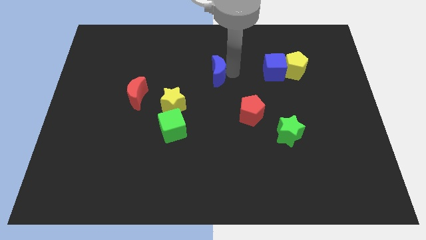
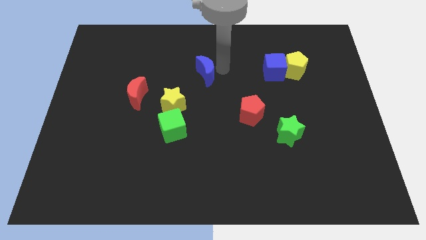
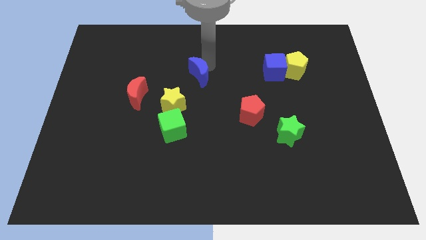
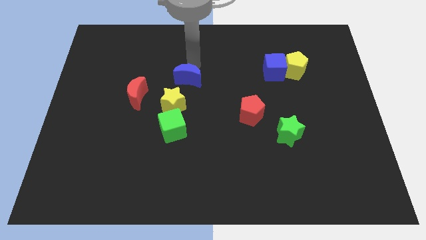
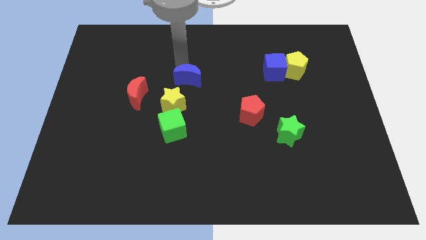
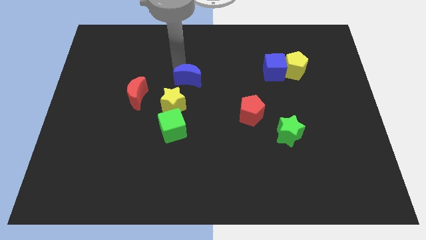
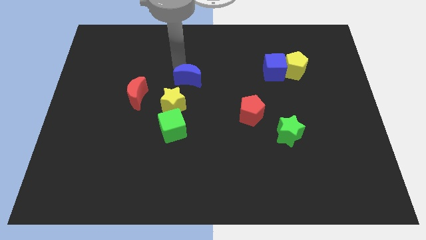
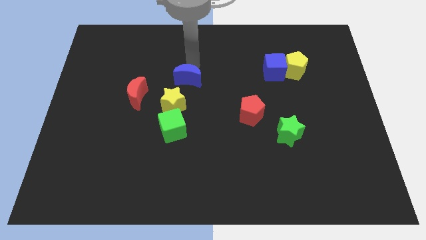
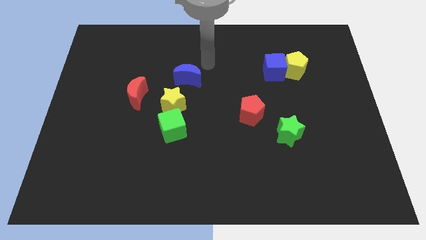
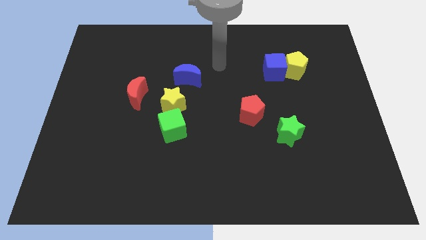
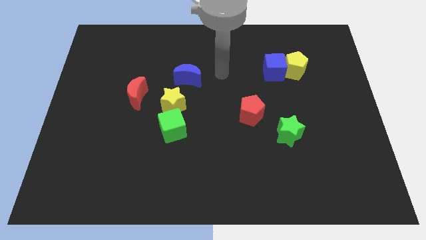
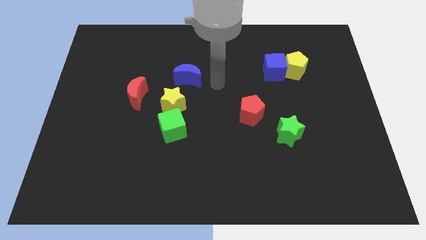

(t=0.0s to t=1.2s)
push the blue moon to the left side

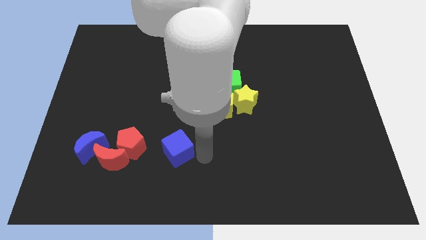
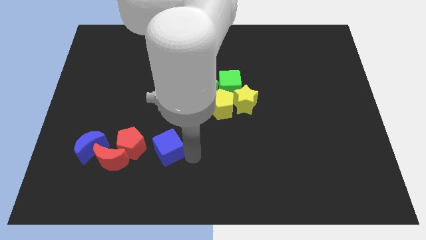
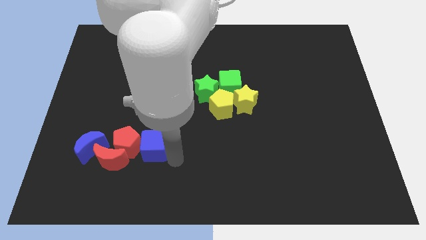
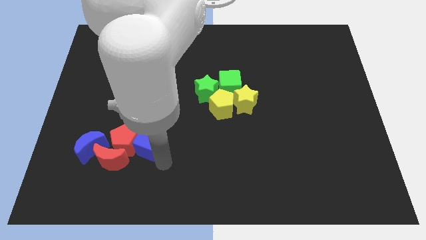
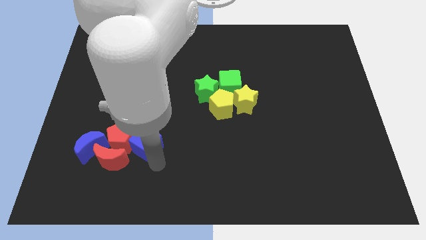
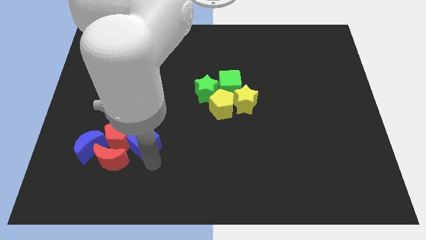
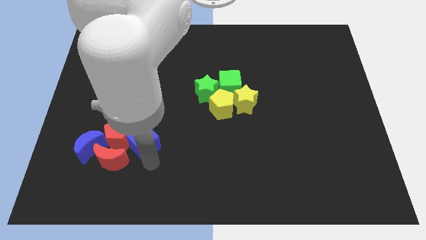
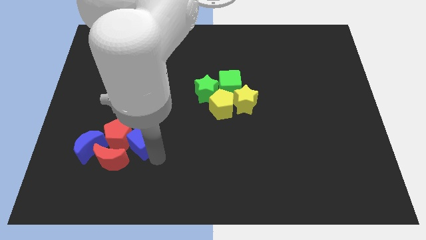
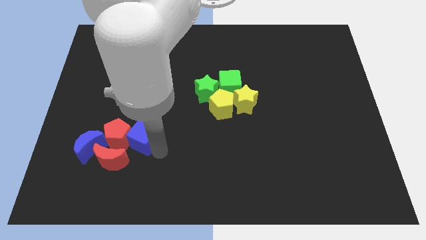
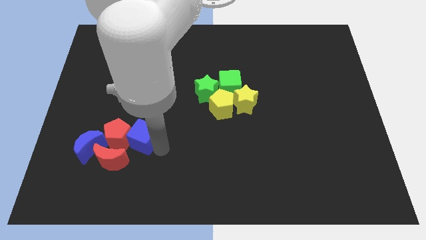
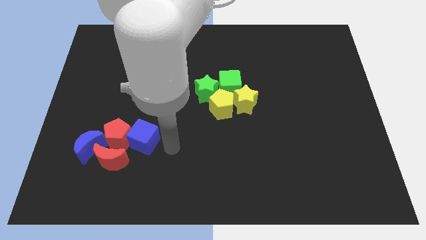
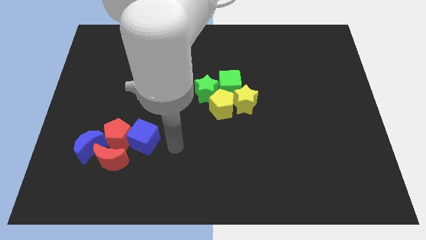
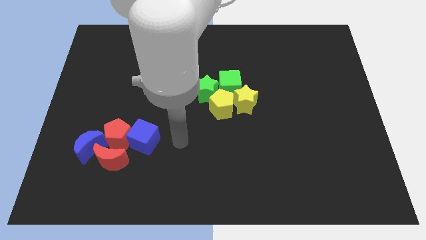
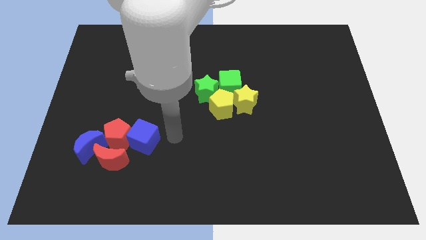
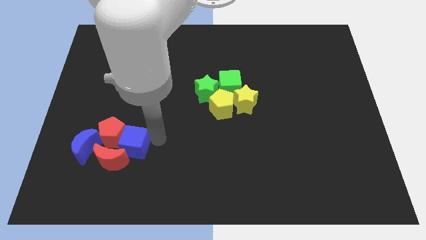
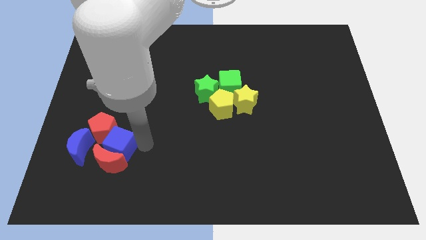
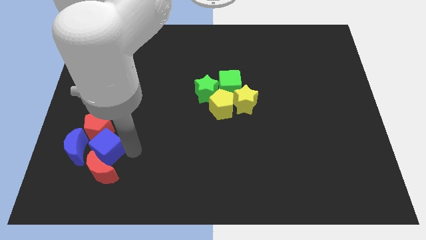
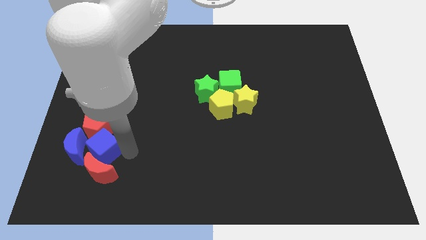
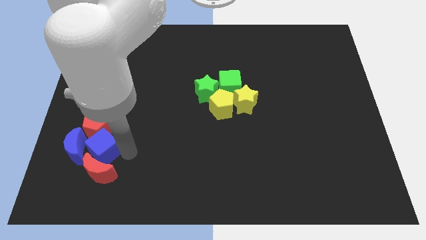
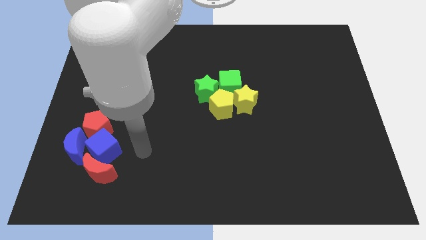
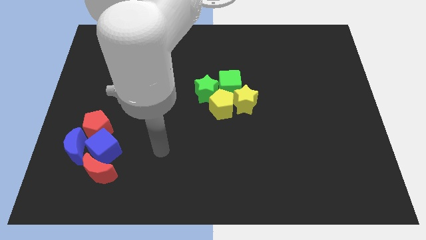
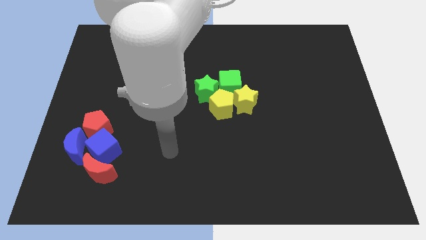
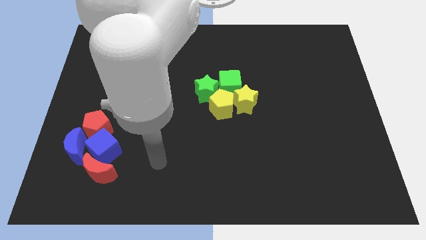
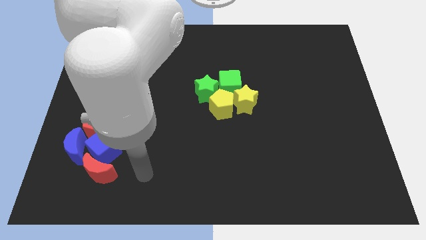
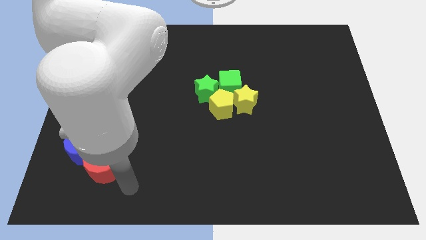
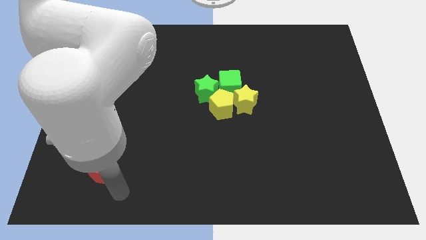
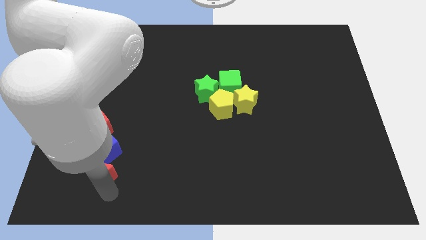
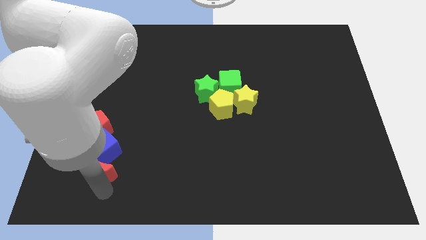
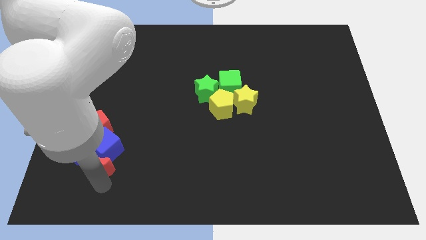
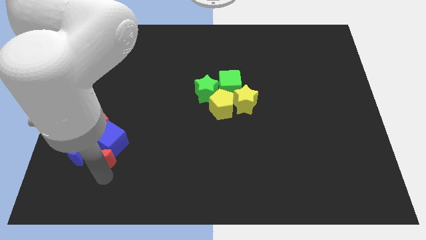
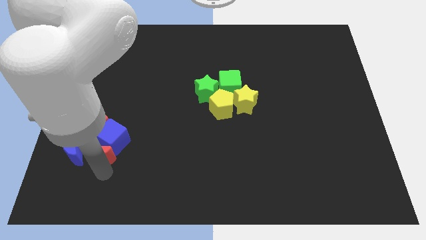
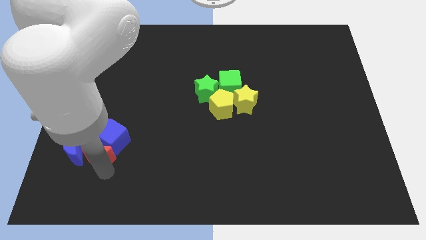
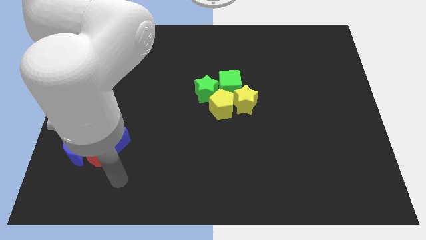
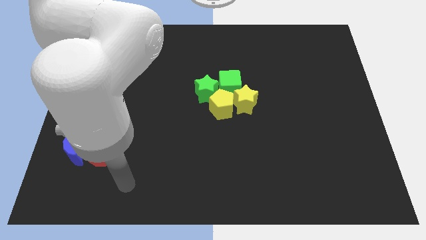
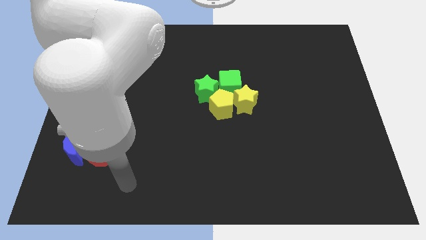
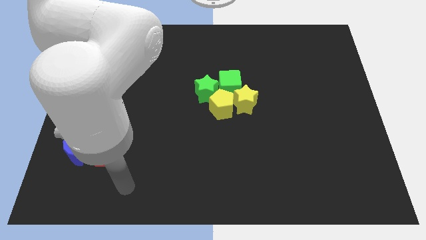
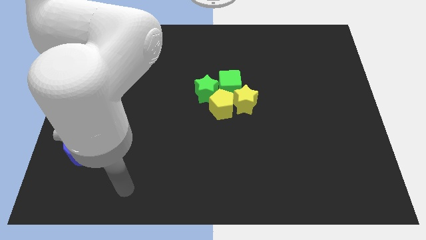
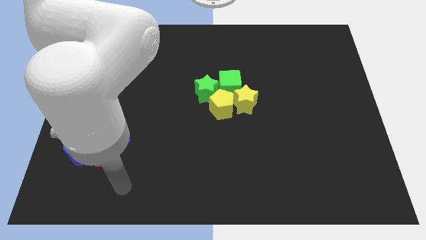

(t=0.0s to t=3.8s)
push the blue cube close to the red crescent

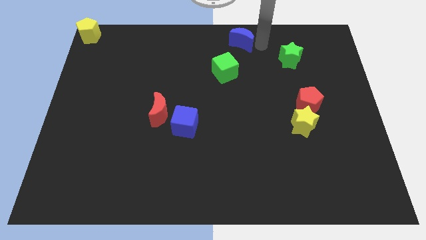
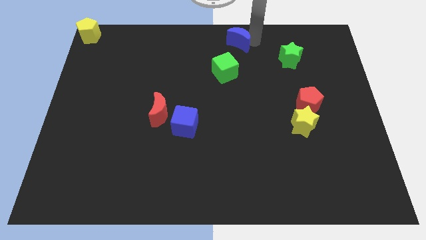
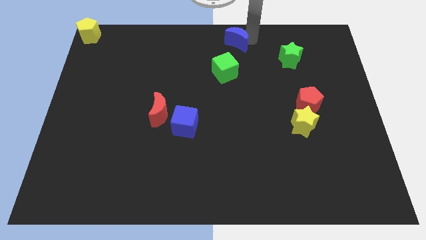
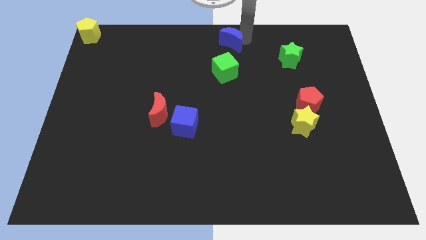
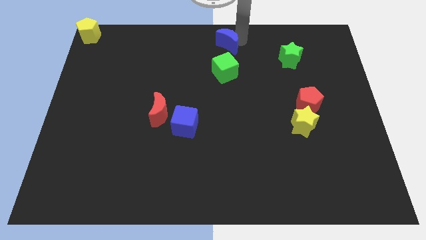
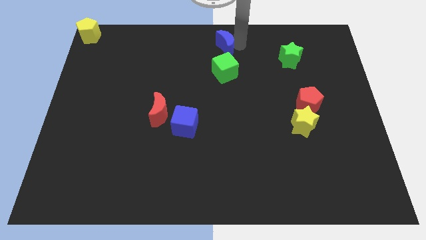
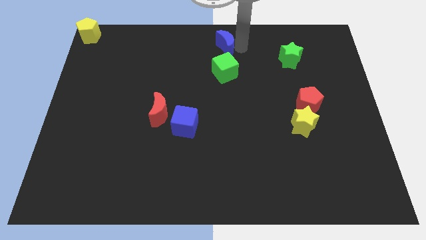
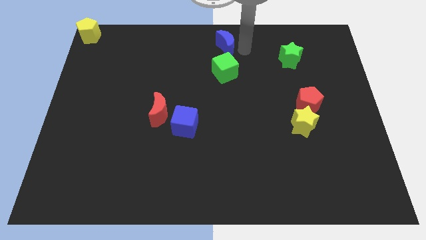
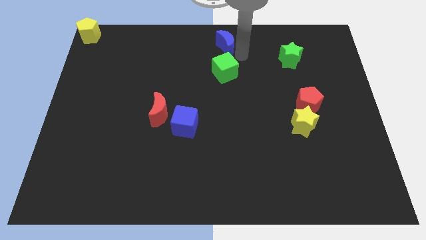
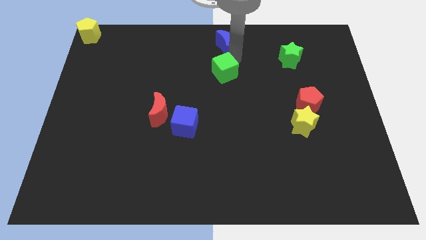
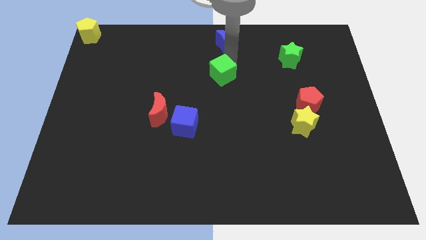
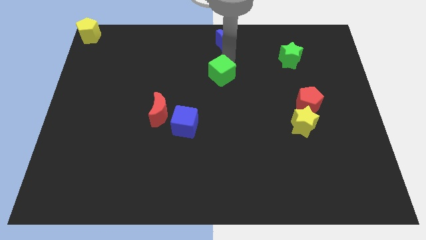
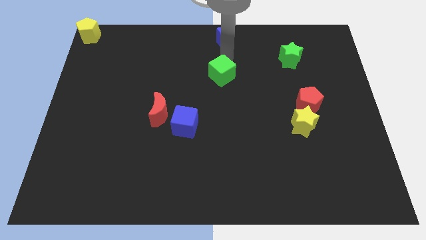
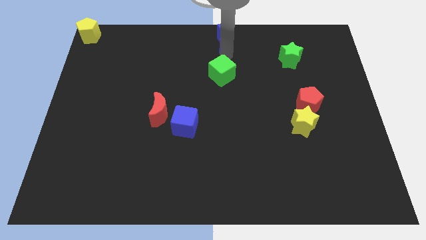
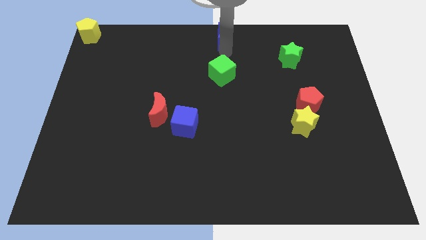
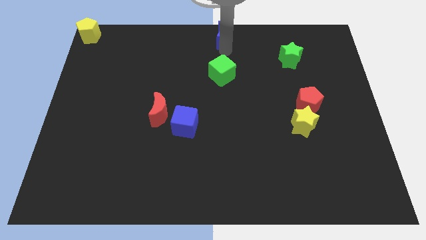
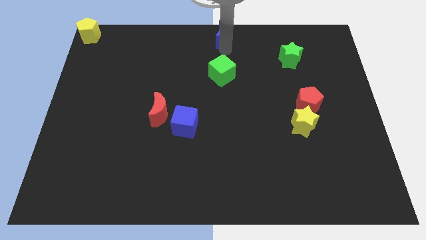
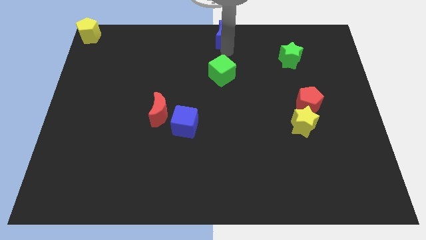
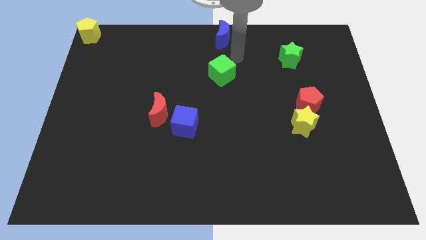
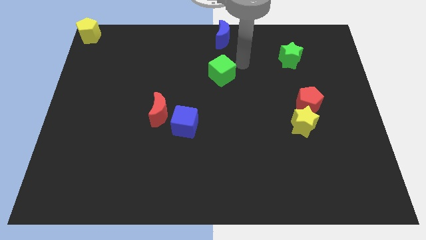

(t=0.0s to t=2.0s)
move the blue crescent at the top of the green cube

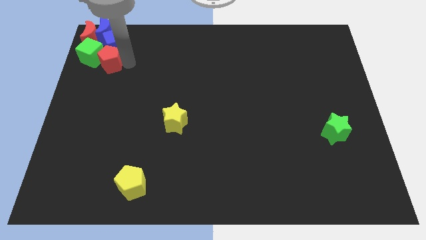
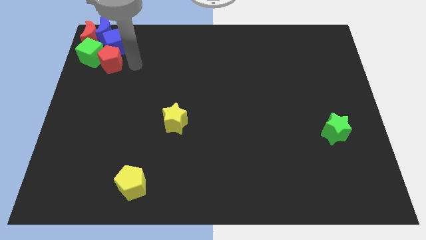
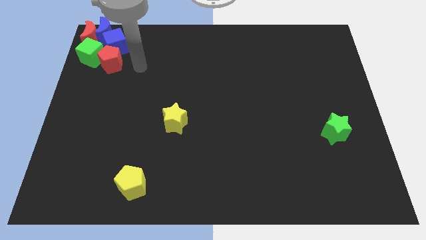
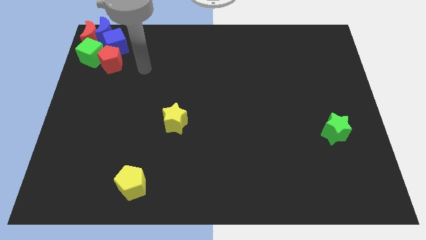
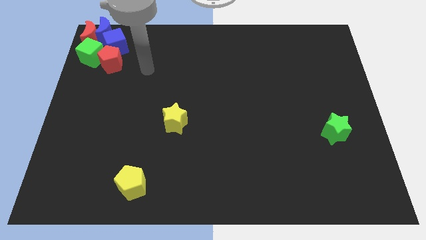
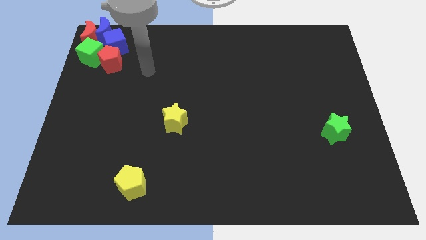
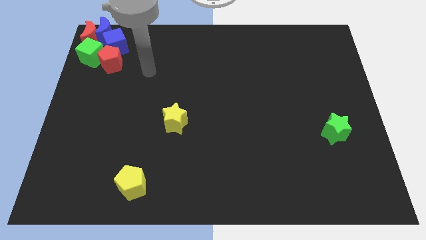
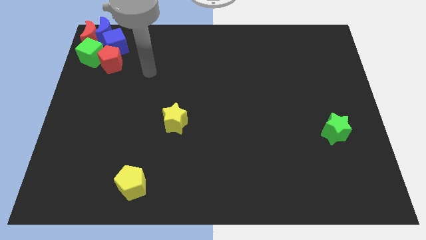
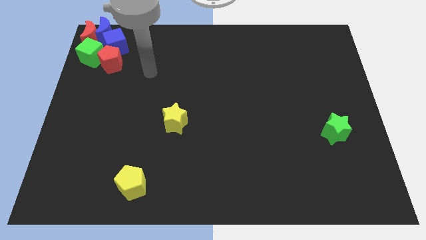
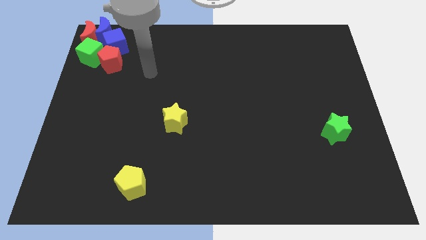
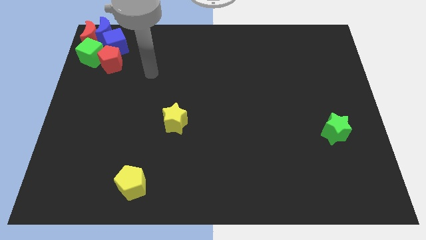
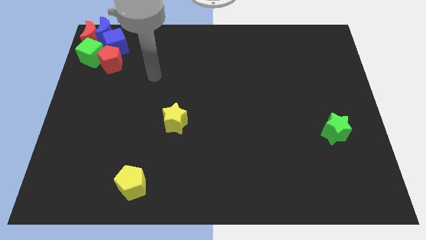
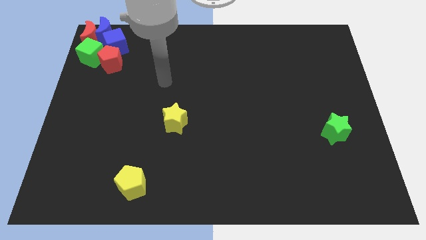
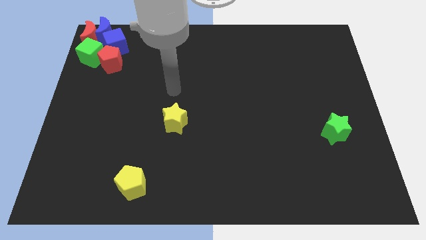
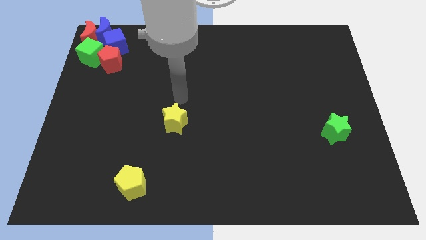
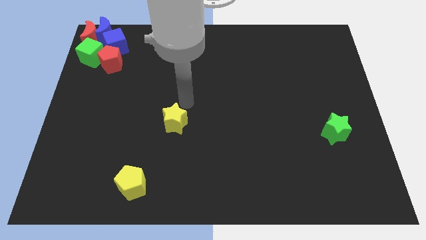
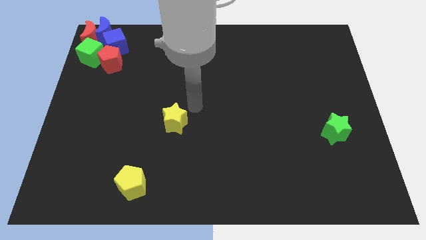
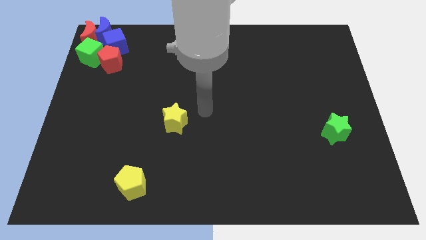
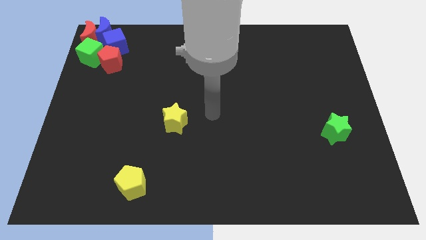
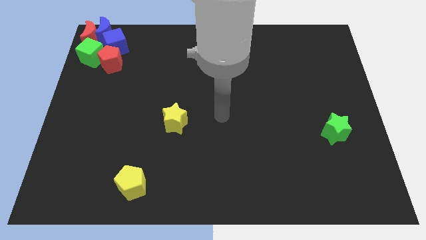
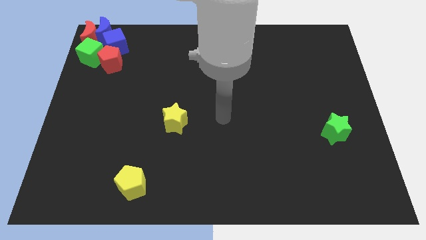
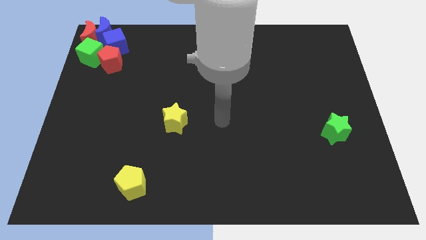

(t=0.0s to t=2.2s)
move your arm away from the red pentagon
